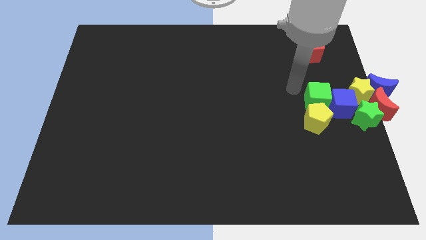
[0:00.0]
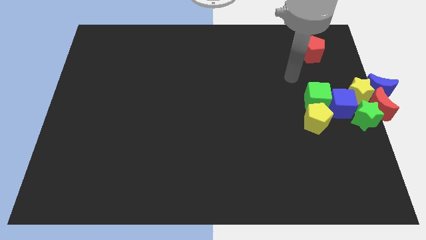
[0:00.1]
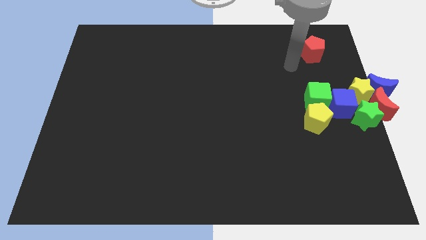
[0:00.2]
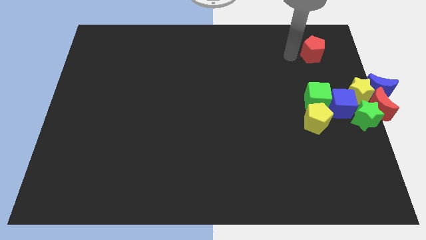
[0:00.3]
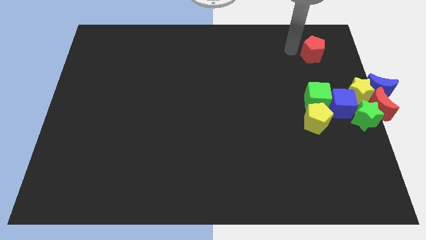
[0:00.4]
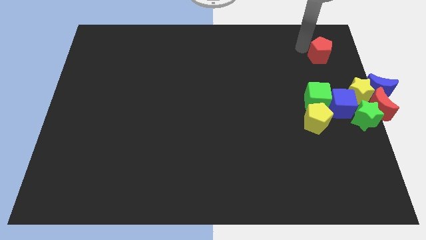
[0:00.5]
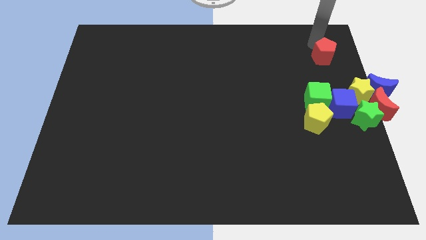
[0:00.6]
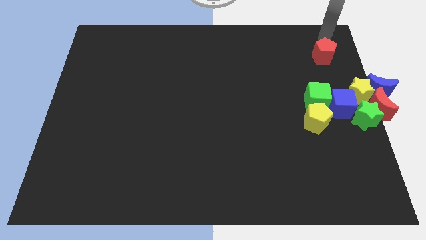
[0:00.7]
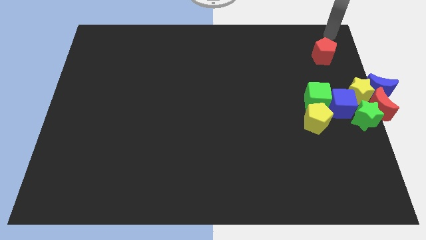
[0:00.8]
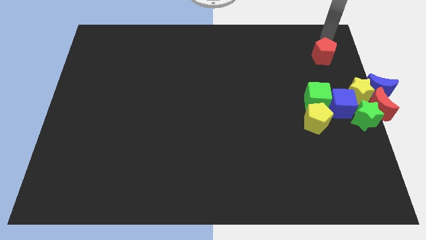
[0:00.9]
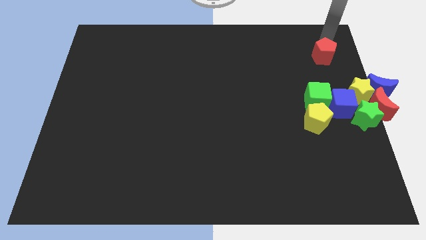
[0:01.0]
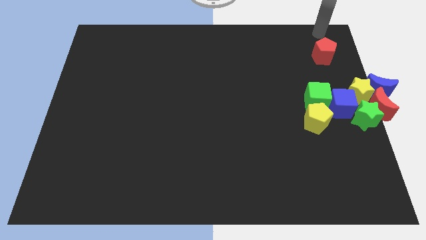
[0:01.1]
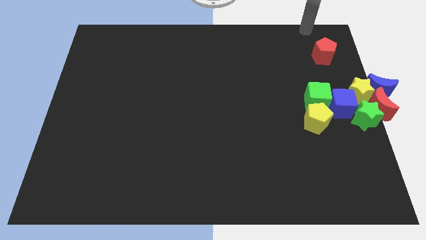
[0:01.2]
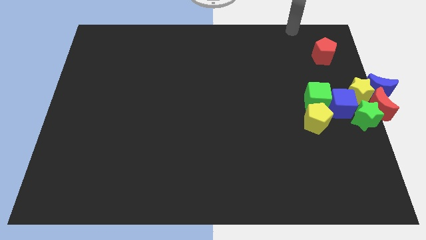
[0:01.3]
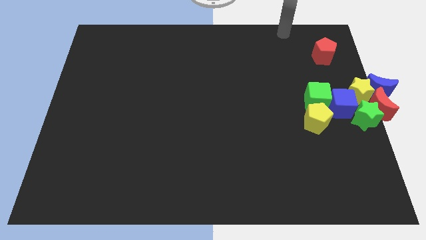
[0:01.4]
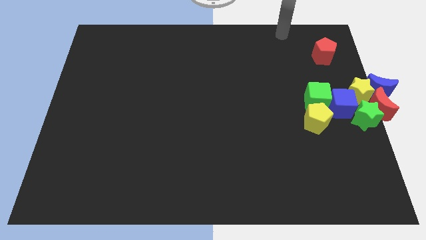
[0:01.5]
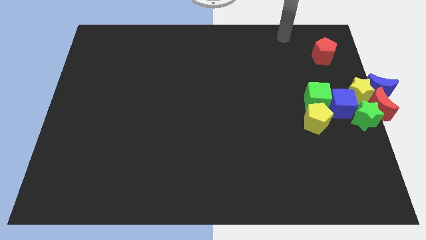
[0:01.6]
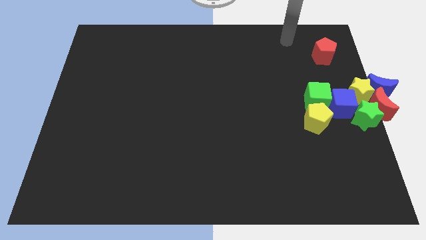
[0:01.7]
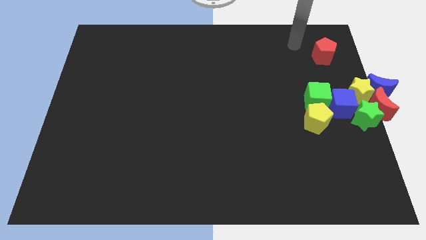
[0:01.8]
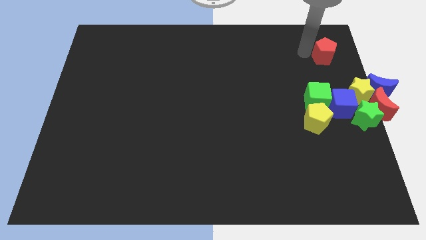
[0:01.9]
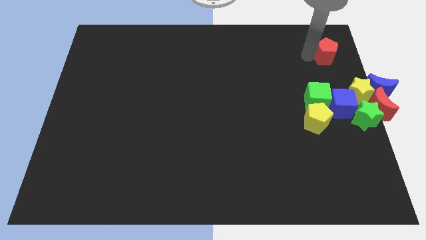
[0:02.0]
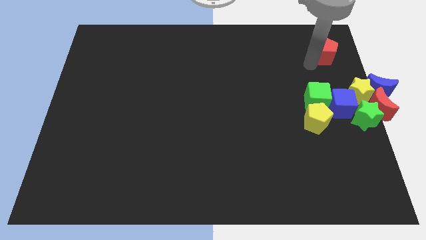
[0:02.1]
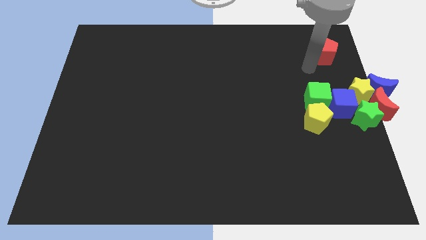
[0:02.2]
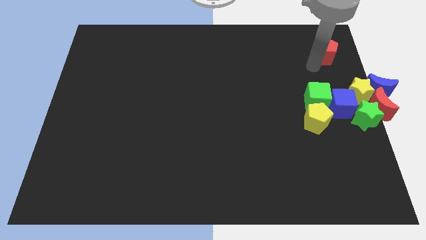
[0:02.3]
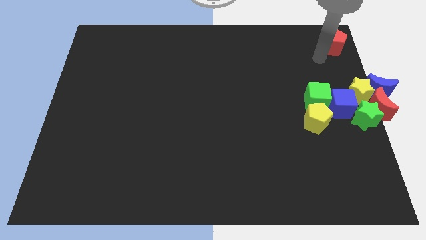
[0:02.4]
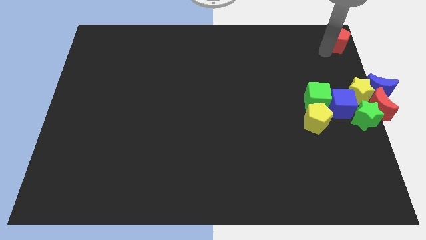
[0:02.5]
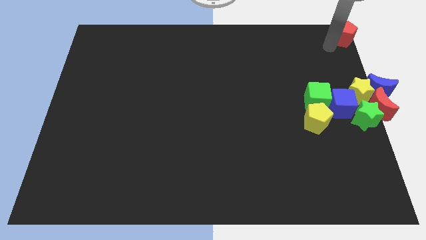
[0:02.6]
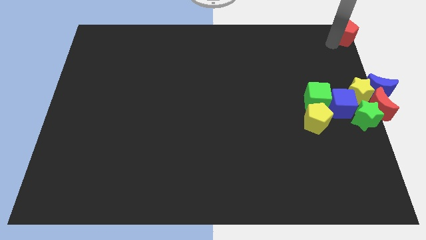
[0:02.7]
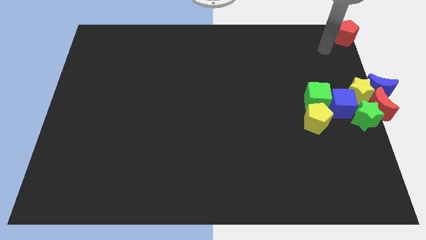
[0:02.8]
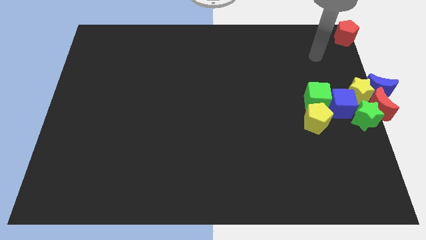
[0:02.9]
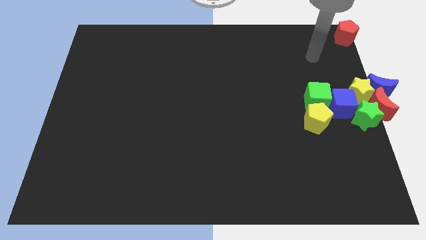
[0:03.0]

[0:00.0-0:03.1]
move the red pentagon to the top right corner of the board

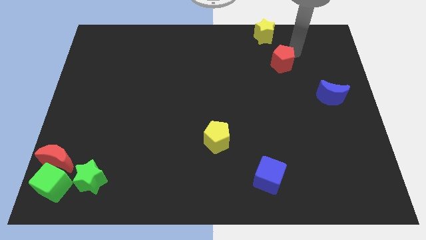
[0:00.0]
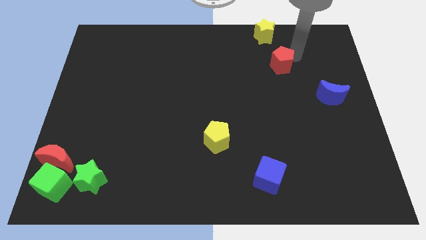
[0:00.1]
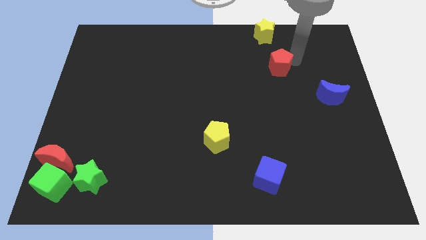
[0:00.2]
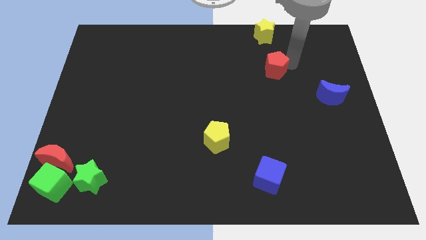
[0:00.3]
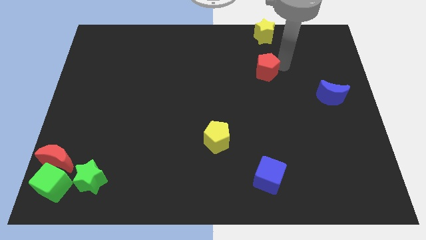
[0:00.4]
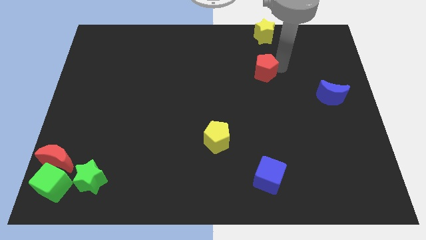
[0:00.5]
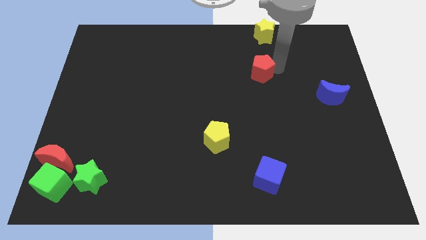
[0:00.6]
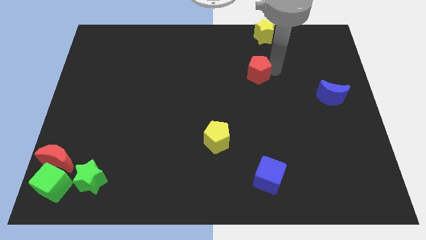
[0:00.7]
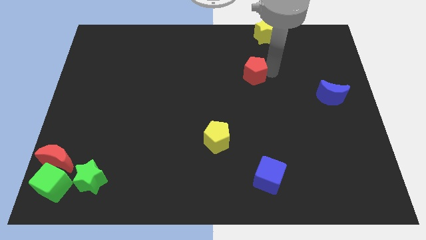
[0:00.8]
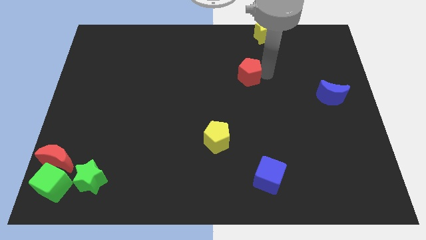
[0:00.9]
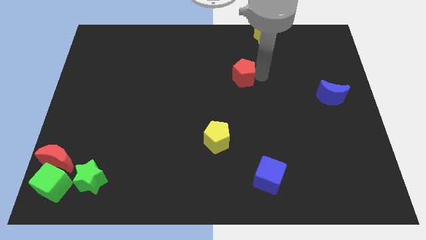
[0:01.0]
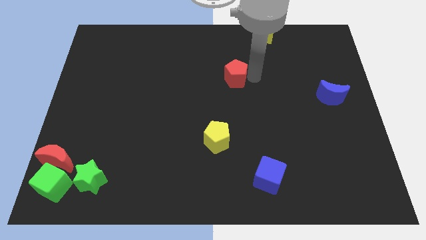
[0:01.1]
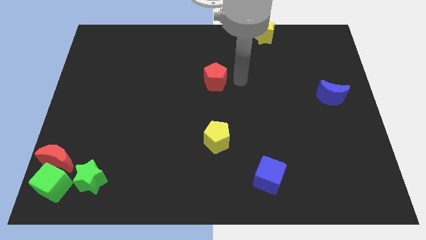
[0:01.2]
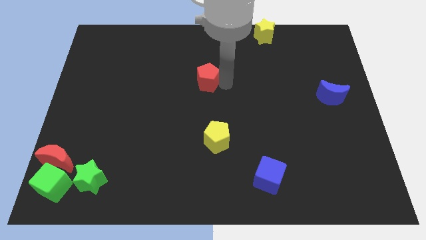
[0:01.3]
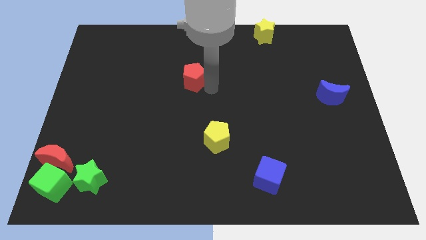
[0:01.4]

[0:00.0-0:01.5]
move the red pentagon to the center

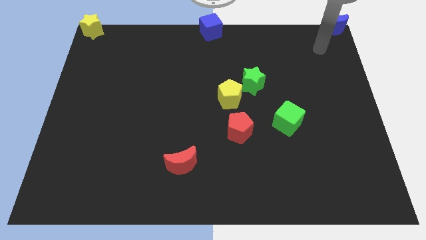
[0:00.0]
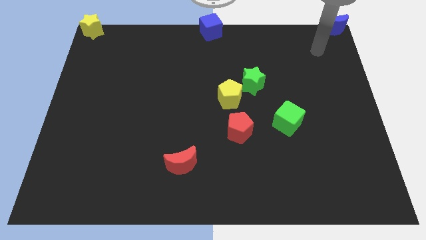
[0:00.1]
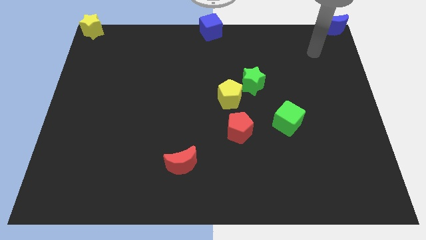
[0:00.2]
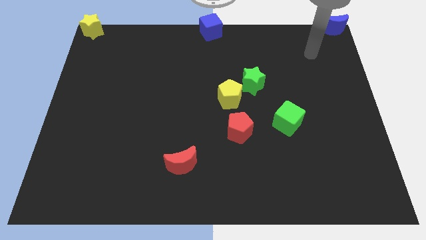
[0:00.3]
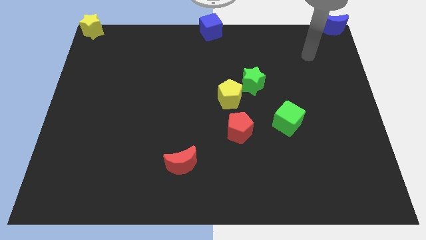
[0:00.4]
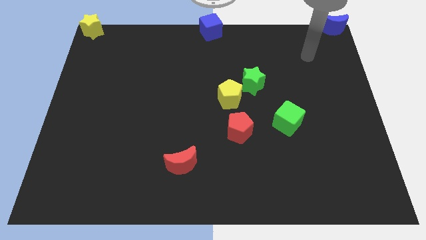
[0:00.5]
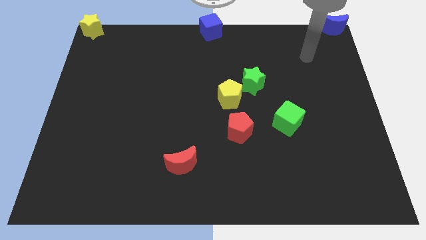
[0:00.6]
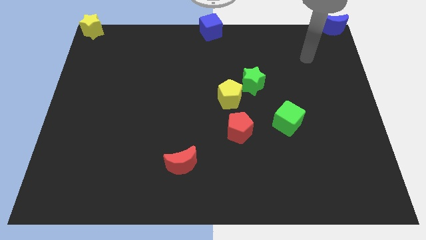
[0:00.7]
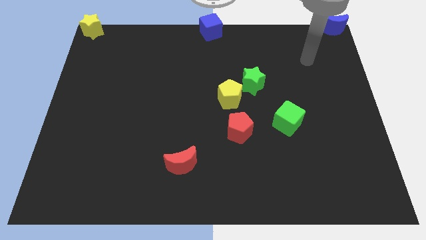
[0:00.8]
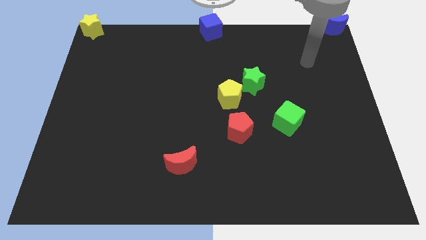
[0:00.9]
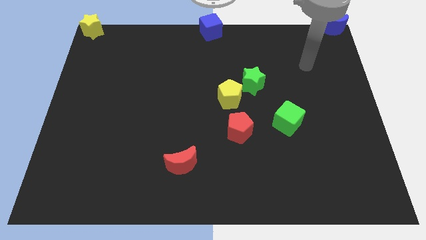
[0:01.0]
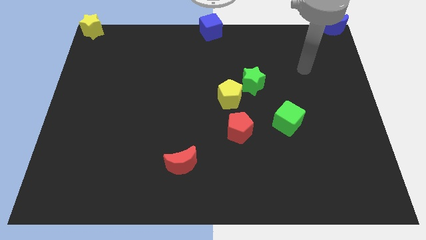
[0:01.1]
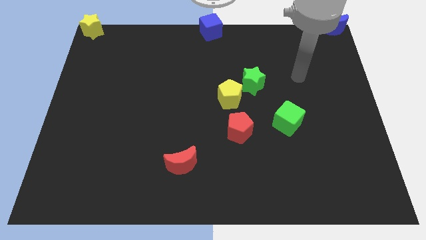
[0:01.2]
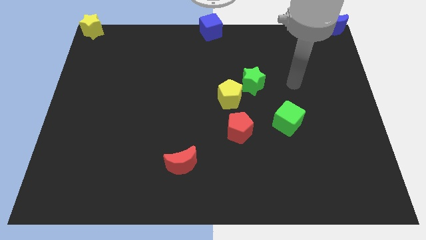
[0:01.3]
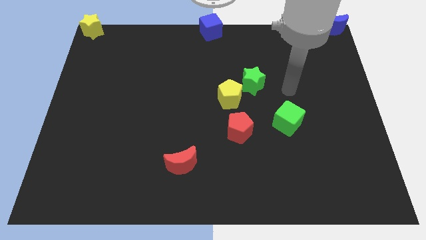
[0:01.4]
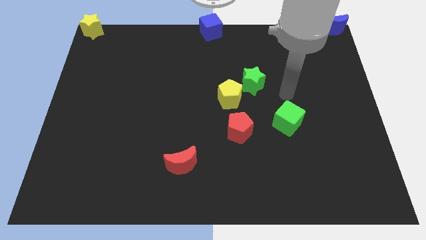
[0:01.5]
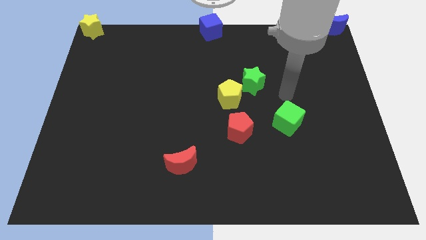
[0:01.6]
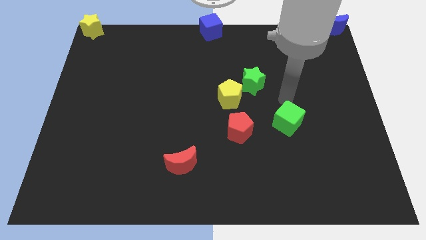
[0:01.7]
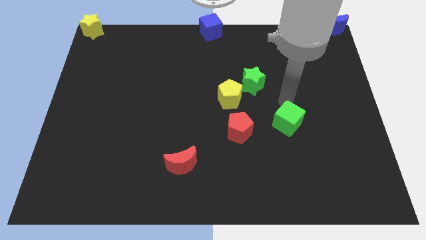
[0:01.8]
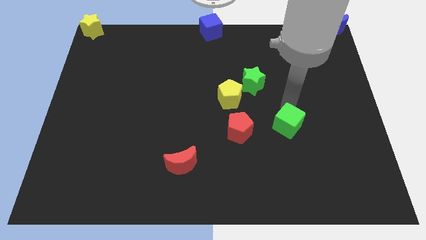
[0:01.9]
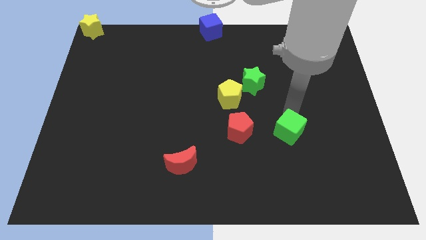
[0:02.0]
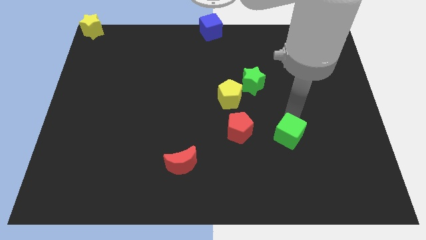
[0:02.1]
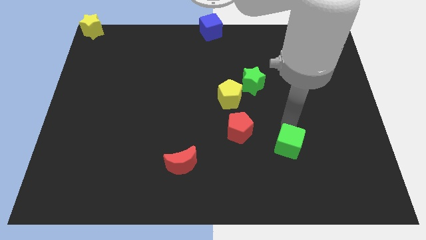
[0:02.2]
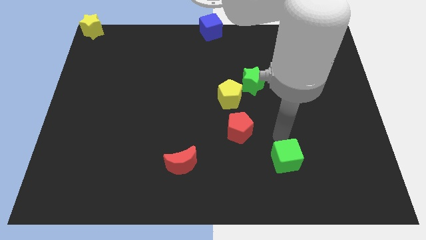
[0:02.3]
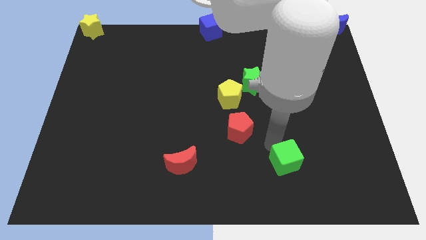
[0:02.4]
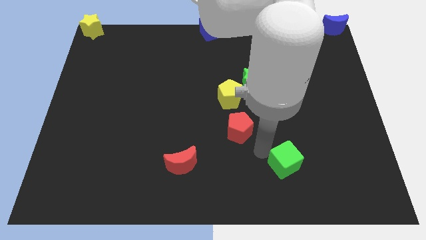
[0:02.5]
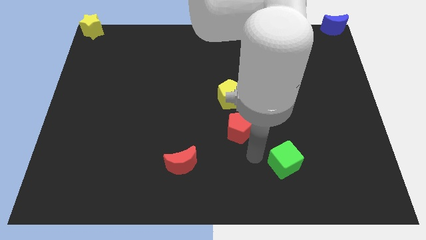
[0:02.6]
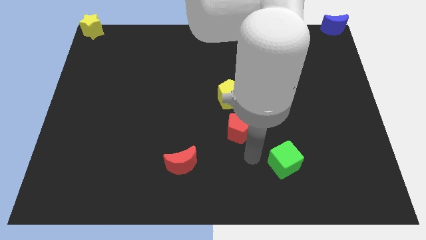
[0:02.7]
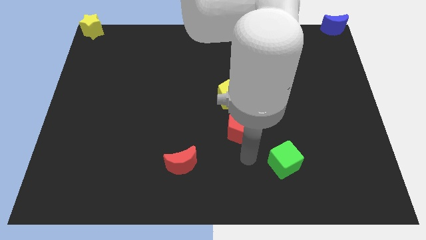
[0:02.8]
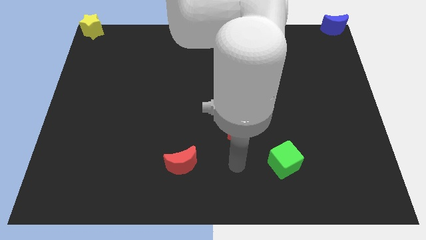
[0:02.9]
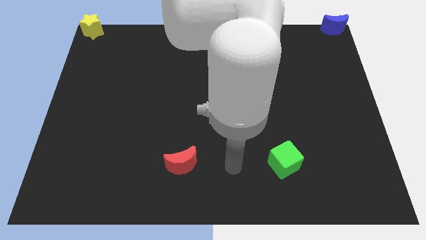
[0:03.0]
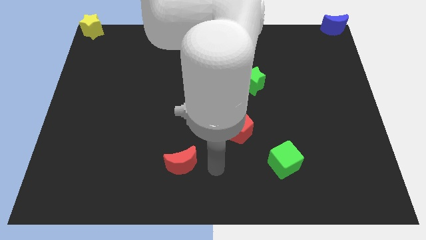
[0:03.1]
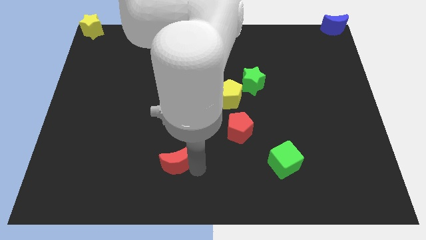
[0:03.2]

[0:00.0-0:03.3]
move the green cube diagonally on the bottom right side of the red pentagon

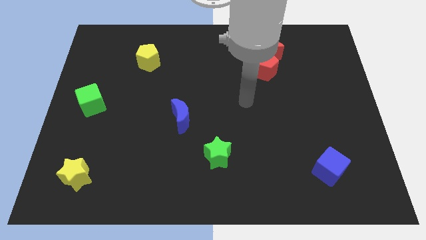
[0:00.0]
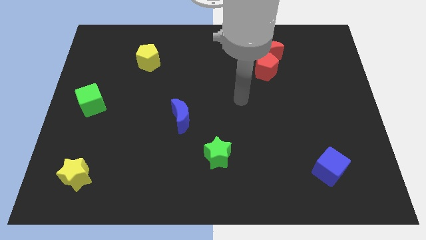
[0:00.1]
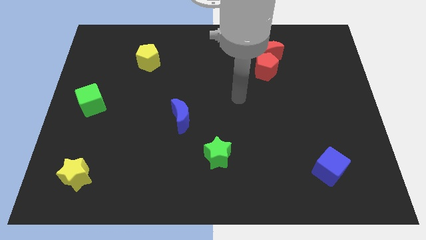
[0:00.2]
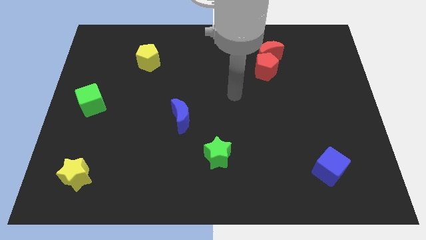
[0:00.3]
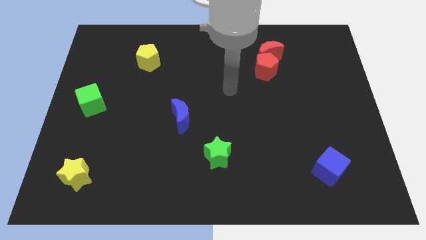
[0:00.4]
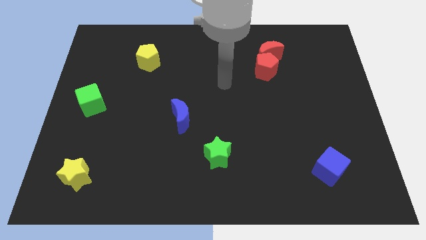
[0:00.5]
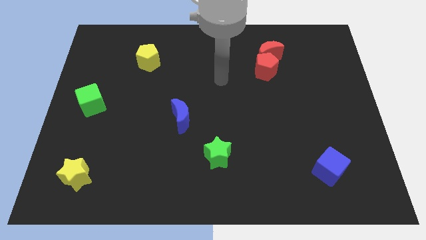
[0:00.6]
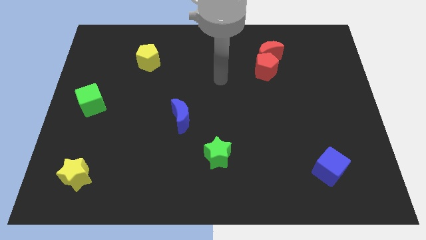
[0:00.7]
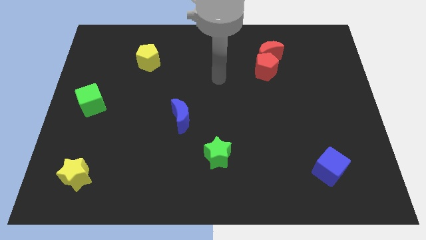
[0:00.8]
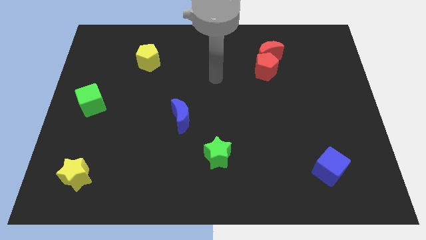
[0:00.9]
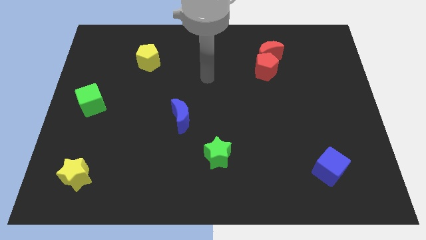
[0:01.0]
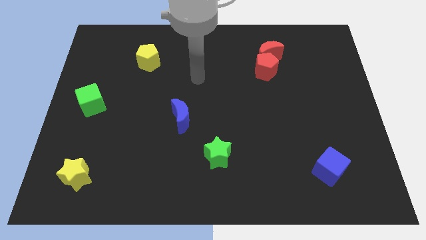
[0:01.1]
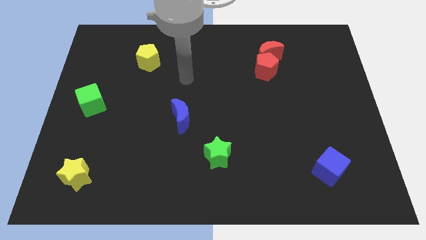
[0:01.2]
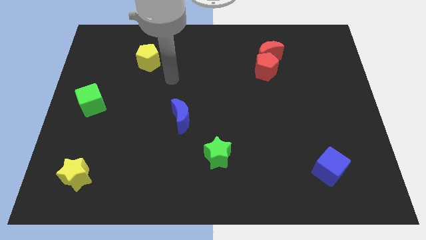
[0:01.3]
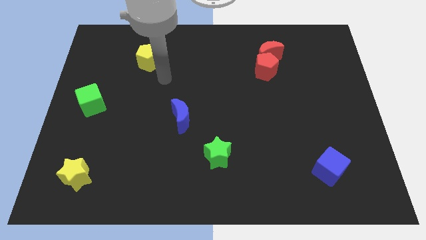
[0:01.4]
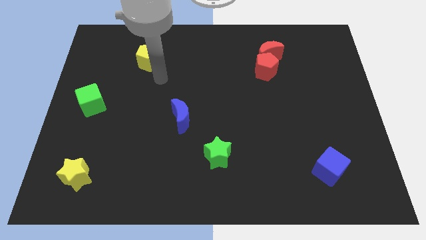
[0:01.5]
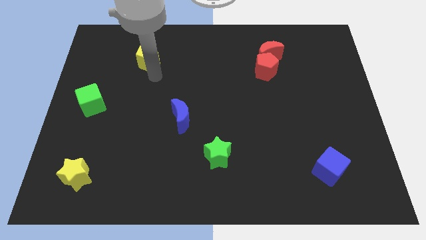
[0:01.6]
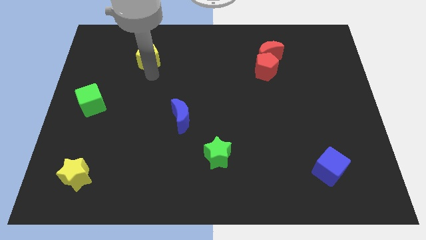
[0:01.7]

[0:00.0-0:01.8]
point your arm at the bottom of the yellow pentagon
